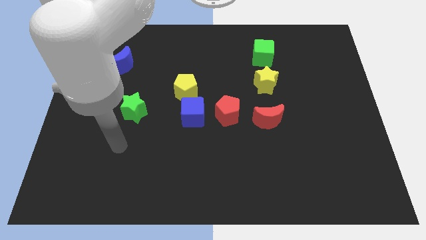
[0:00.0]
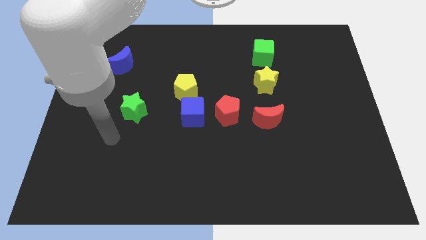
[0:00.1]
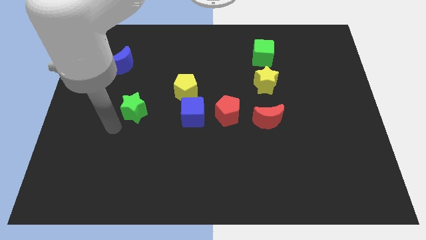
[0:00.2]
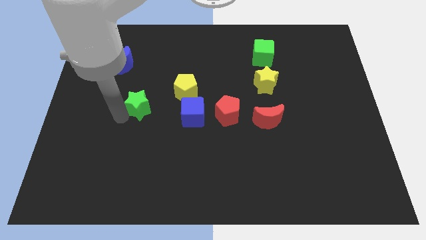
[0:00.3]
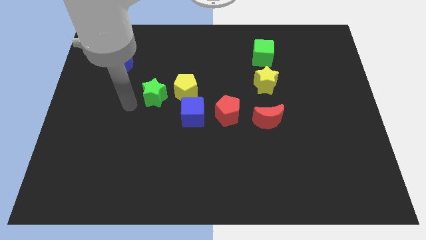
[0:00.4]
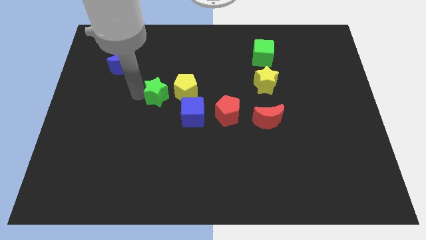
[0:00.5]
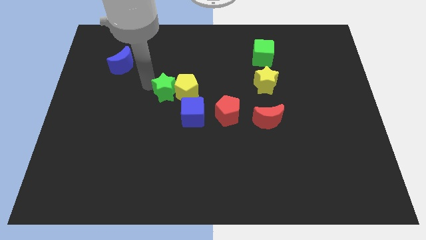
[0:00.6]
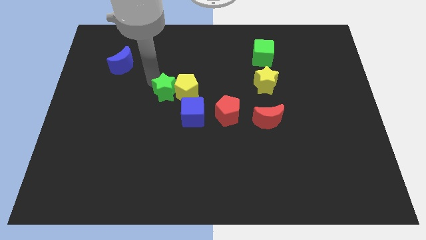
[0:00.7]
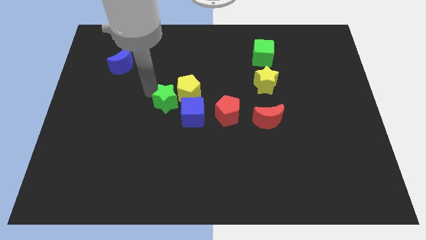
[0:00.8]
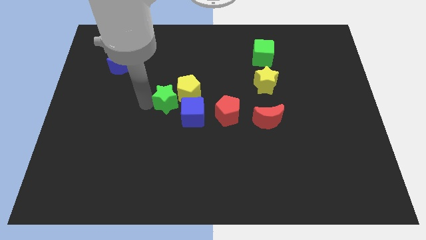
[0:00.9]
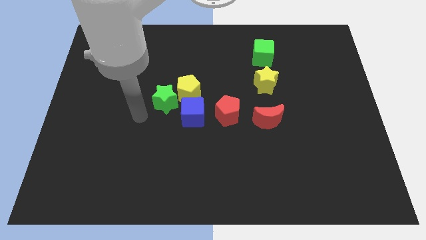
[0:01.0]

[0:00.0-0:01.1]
push the green star into yellow pentagon

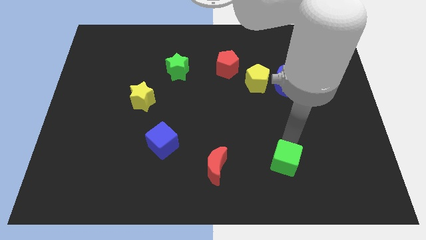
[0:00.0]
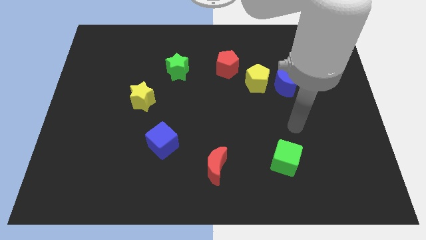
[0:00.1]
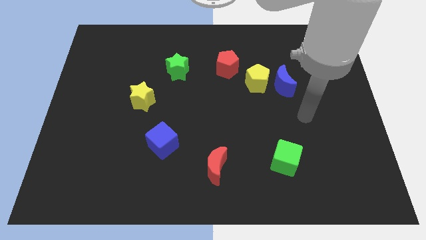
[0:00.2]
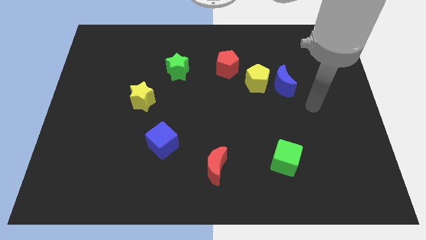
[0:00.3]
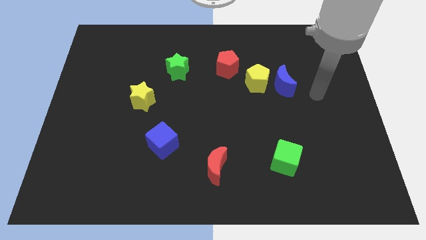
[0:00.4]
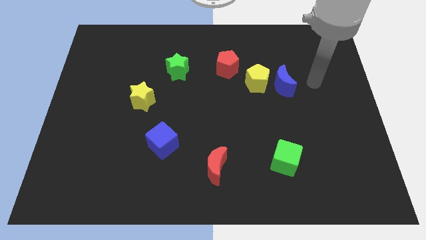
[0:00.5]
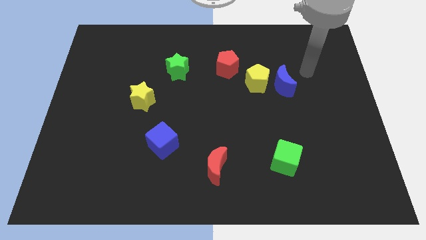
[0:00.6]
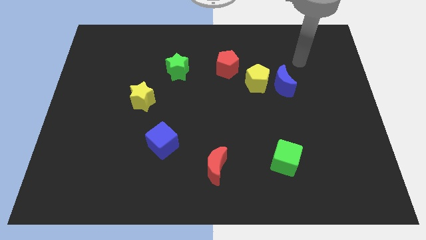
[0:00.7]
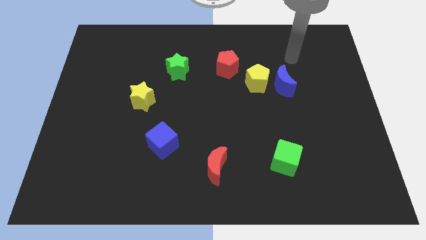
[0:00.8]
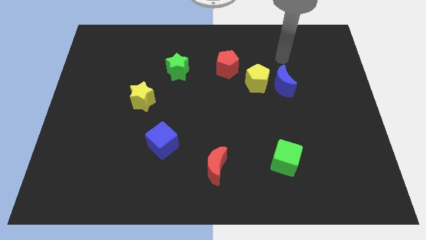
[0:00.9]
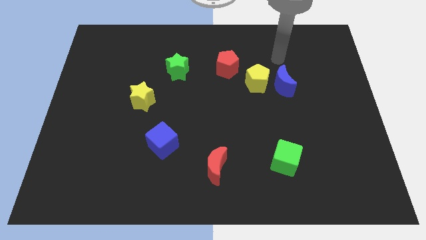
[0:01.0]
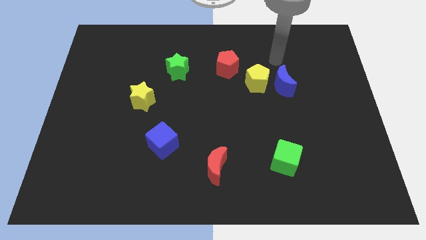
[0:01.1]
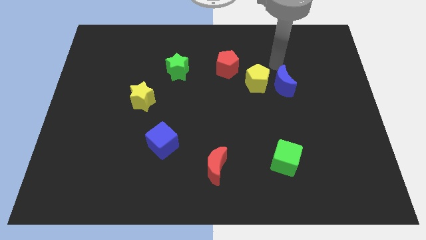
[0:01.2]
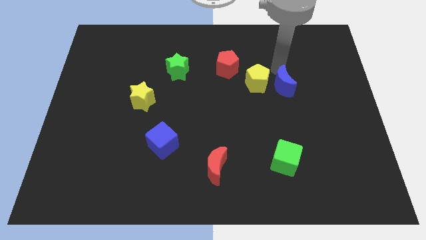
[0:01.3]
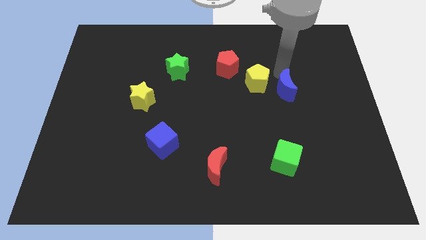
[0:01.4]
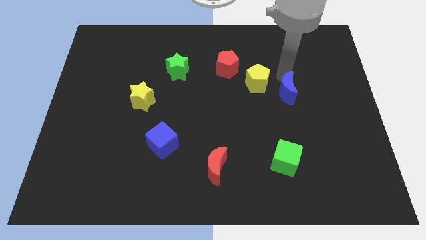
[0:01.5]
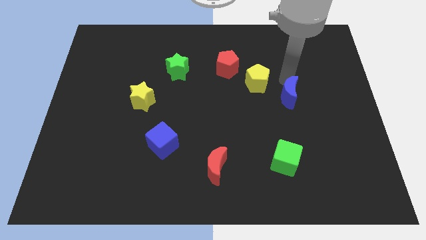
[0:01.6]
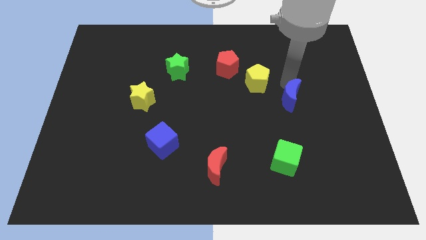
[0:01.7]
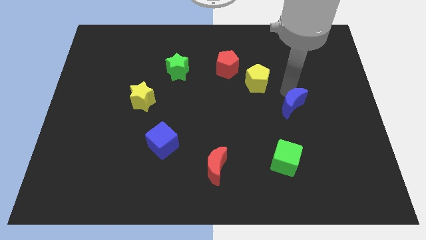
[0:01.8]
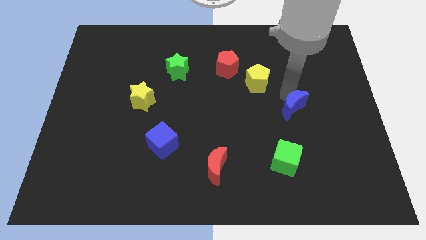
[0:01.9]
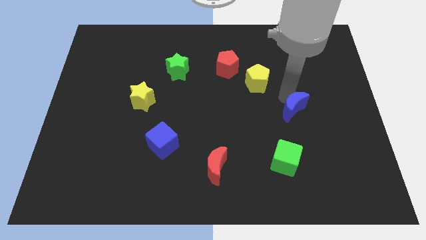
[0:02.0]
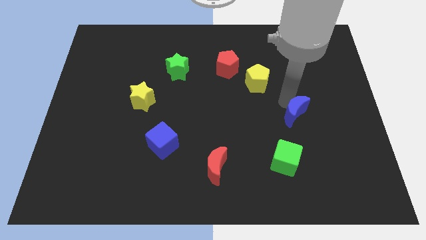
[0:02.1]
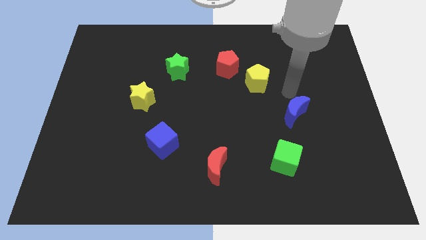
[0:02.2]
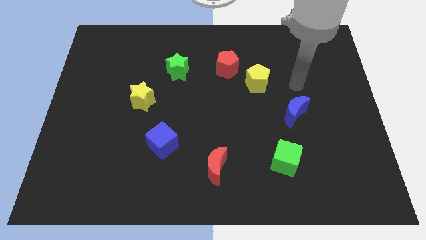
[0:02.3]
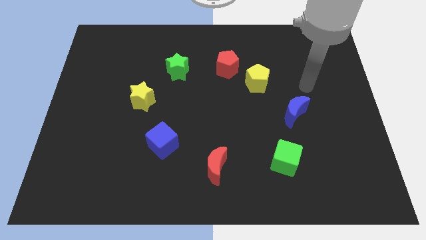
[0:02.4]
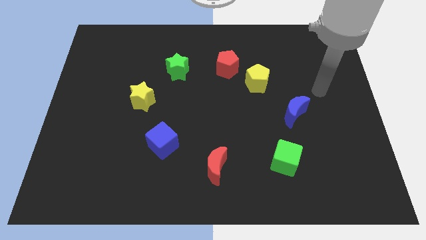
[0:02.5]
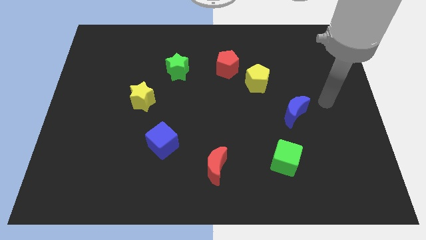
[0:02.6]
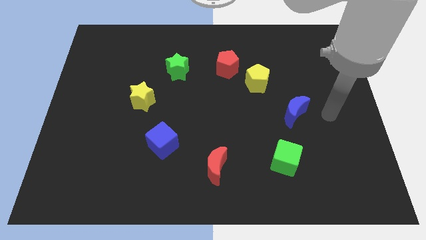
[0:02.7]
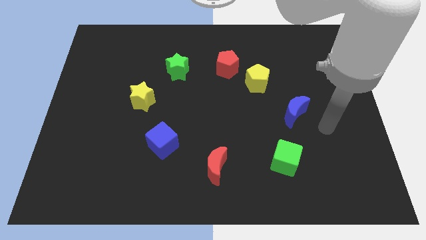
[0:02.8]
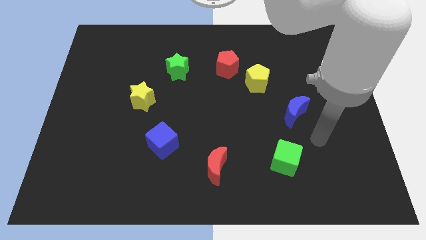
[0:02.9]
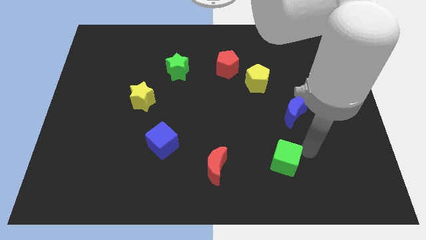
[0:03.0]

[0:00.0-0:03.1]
push the blue crescent slightly to the bottom

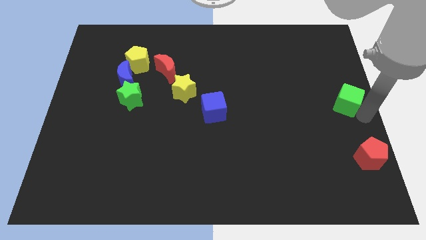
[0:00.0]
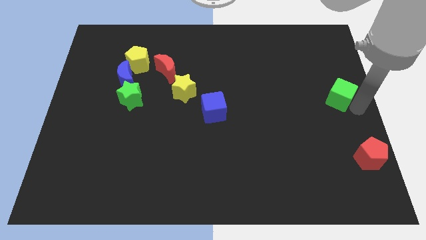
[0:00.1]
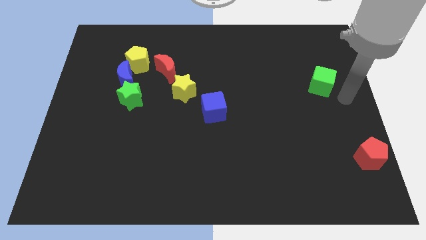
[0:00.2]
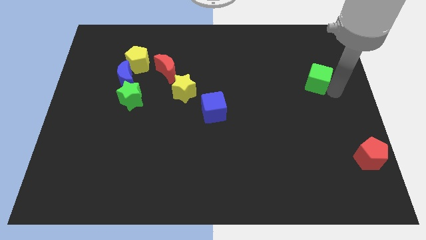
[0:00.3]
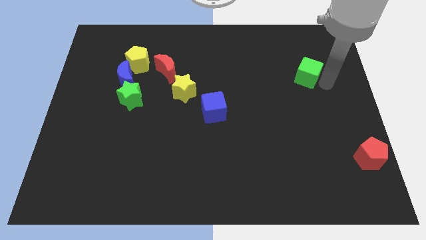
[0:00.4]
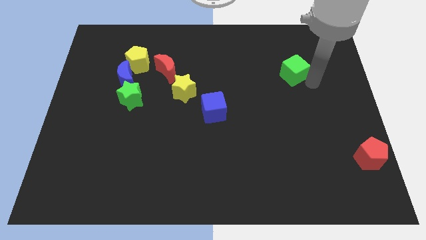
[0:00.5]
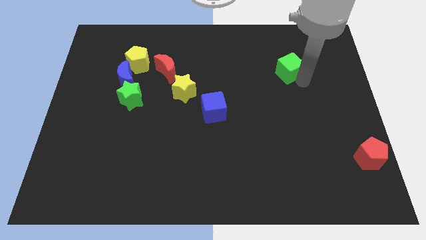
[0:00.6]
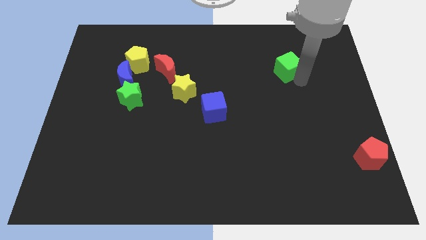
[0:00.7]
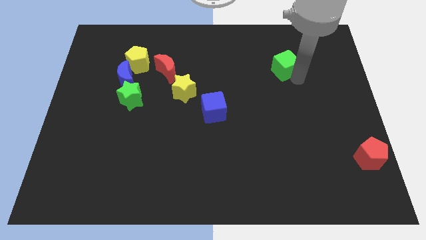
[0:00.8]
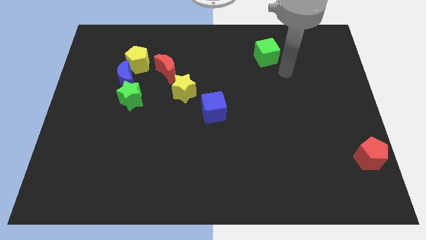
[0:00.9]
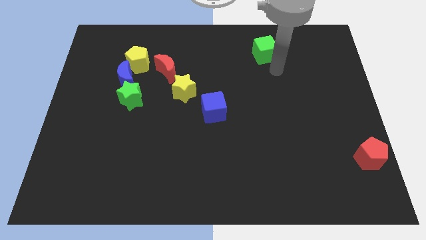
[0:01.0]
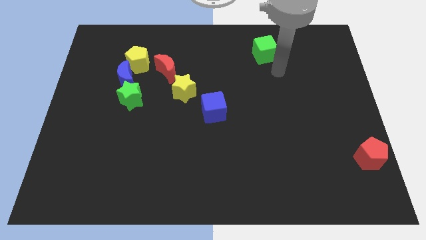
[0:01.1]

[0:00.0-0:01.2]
push the green cube towards the top center of the board

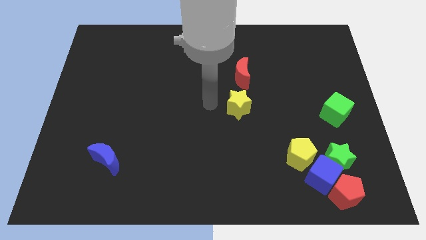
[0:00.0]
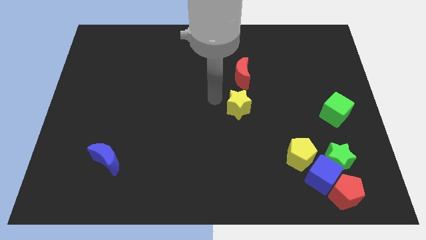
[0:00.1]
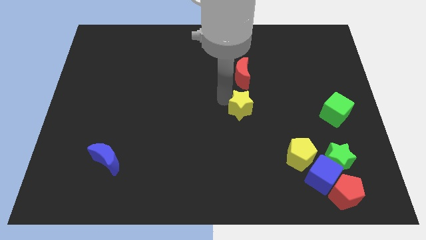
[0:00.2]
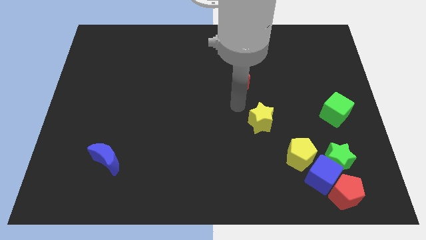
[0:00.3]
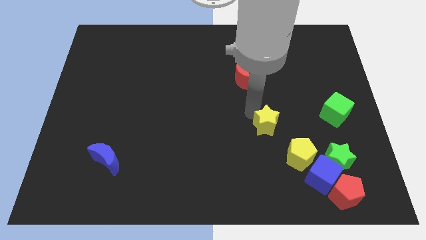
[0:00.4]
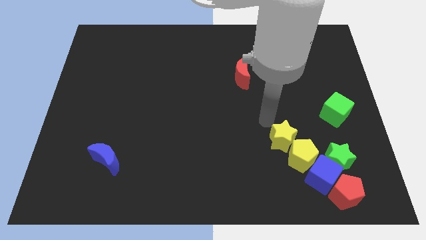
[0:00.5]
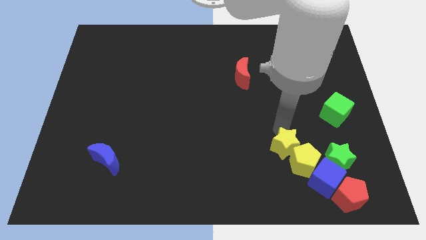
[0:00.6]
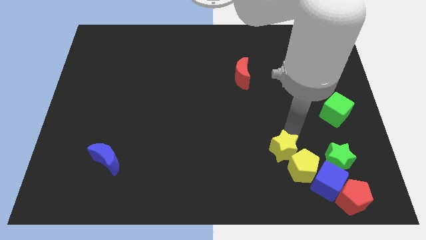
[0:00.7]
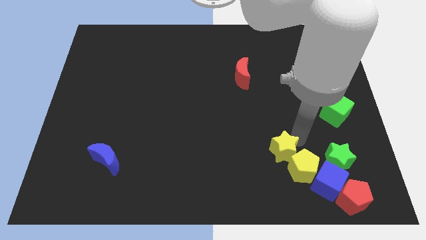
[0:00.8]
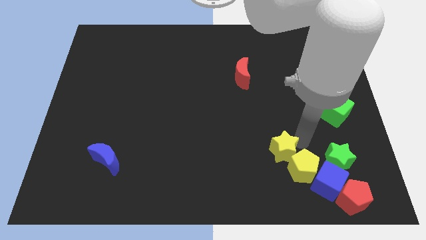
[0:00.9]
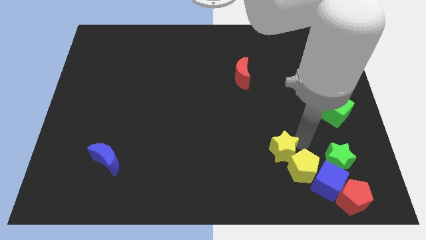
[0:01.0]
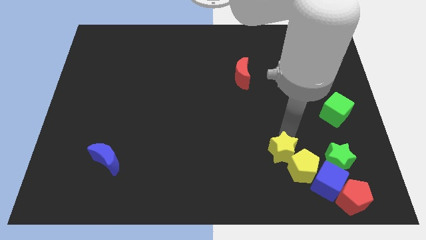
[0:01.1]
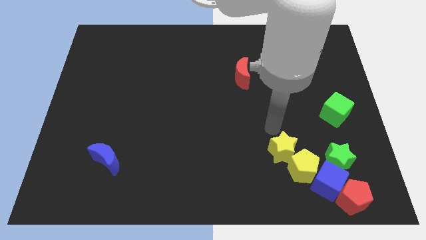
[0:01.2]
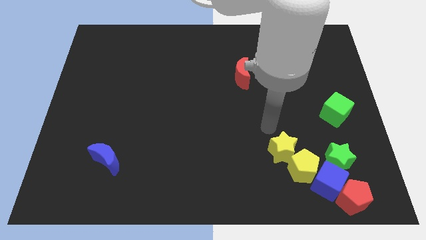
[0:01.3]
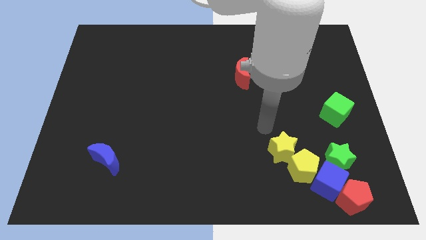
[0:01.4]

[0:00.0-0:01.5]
move the yellow star towards the yellow pentagon

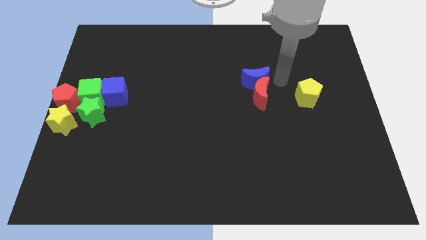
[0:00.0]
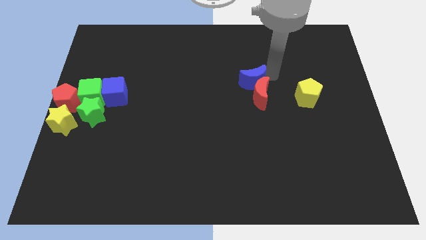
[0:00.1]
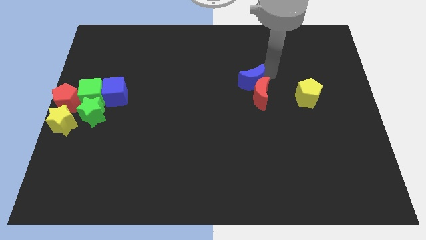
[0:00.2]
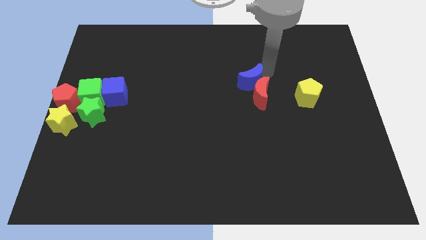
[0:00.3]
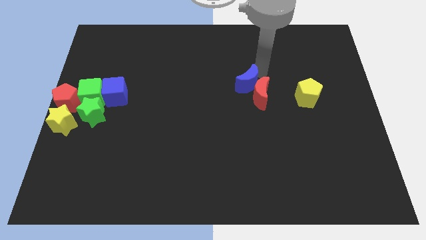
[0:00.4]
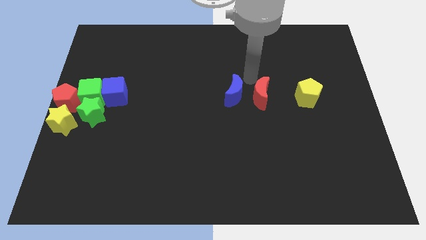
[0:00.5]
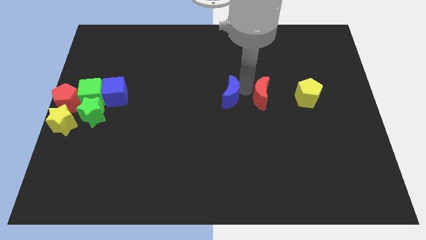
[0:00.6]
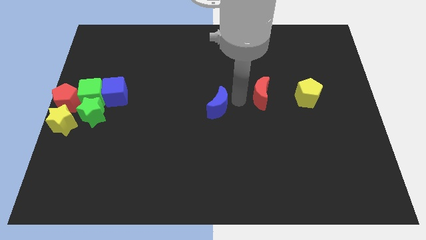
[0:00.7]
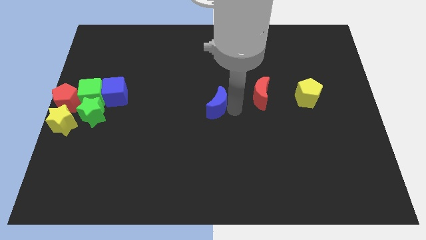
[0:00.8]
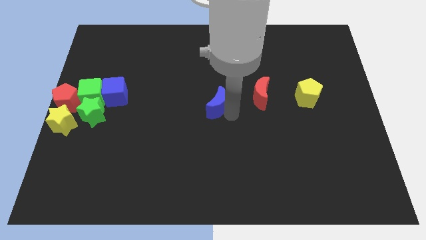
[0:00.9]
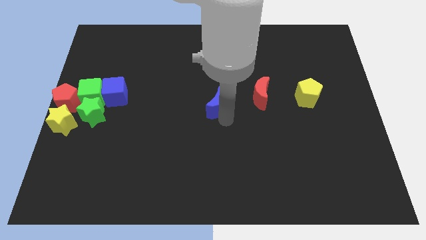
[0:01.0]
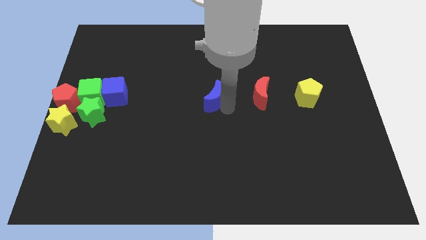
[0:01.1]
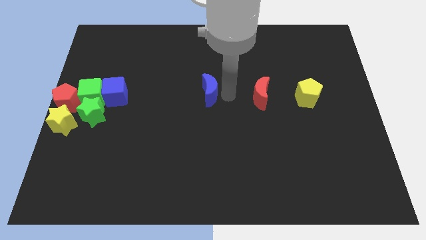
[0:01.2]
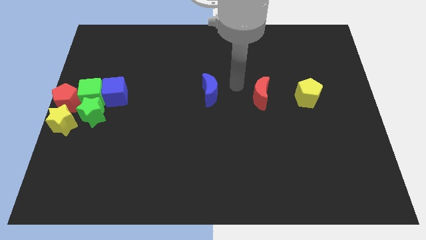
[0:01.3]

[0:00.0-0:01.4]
move the blue crescent to the left side of the red crescent

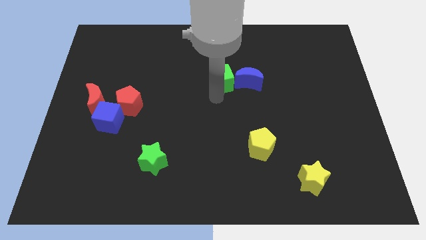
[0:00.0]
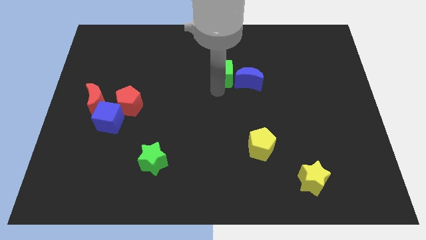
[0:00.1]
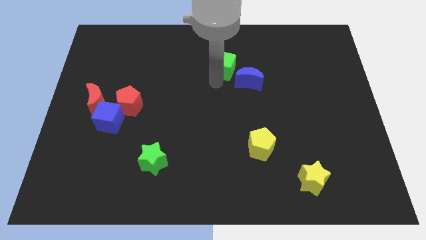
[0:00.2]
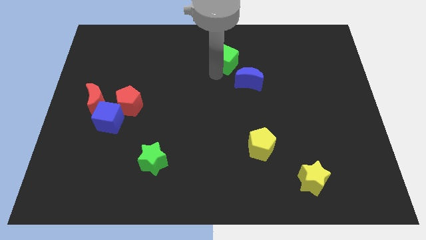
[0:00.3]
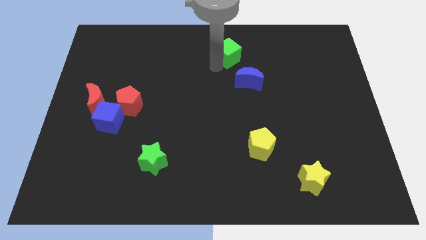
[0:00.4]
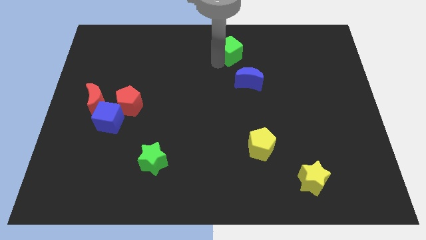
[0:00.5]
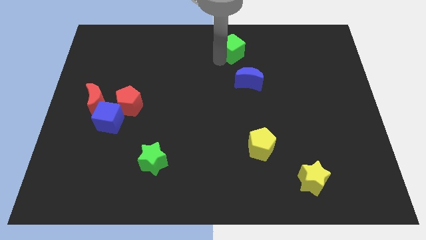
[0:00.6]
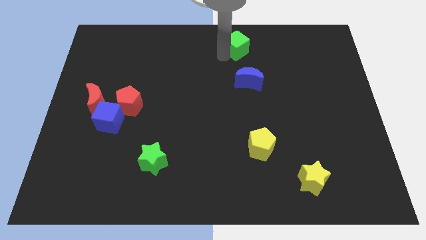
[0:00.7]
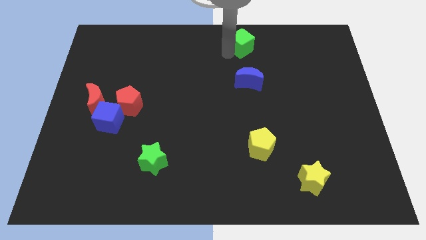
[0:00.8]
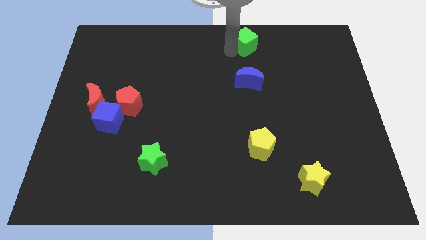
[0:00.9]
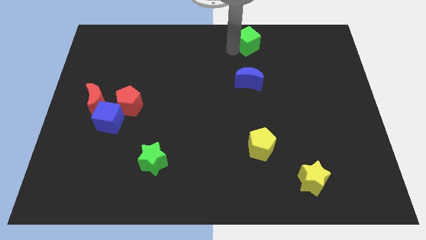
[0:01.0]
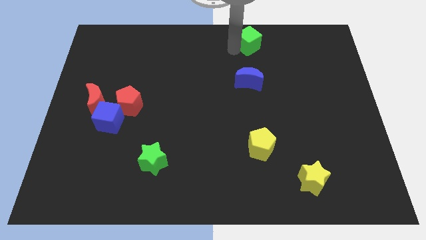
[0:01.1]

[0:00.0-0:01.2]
place green cube vertically above the blue moon
